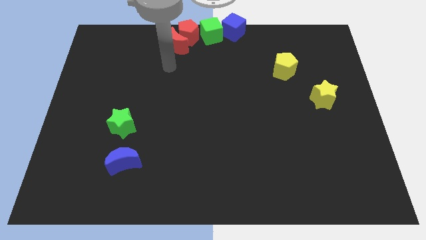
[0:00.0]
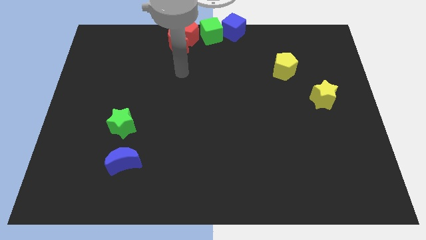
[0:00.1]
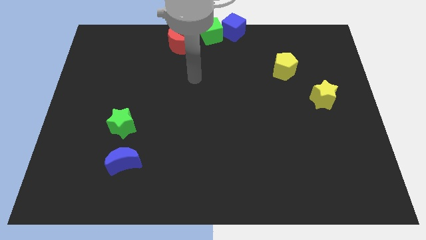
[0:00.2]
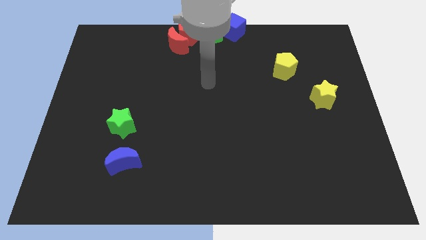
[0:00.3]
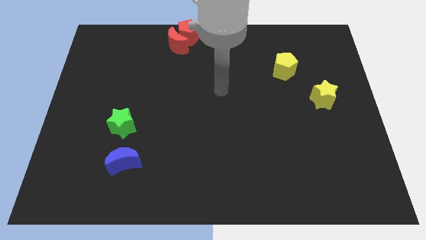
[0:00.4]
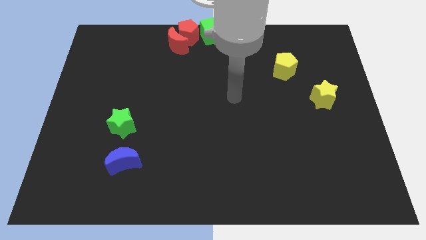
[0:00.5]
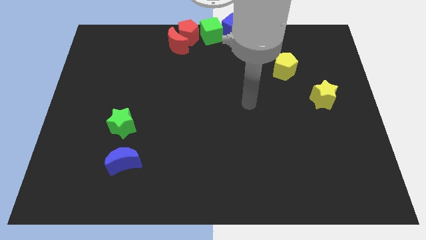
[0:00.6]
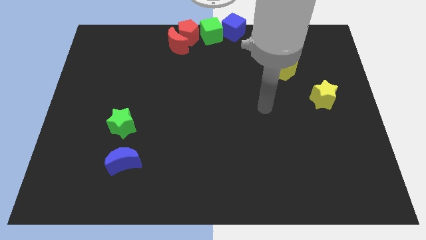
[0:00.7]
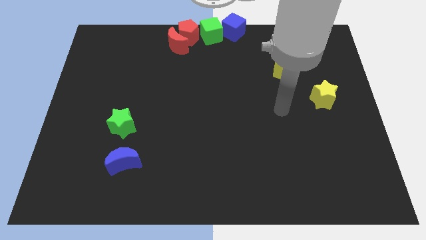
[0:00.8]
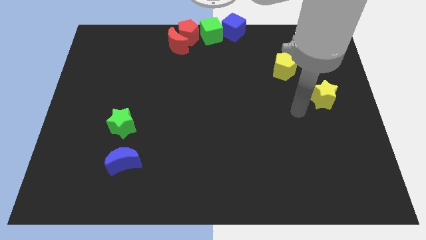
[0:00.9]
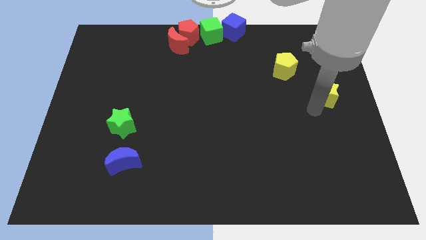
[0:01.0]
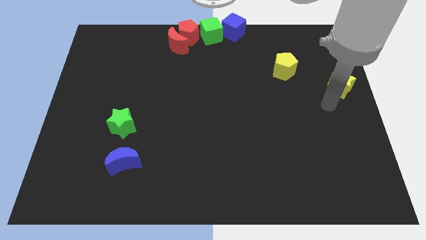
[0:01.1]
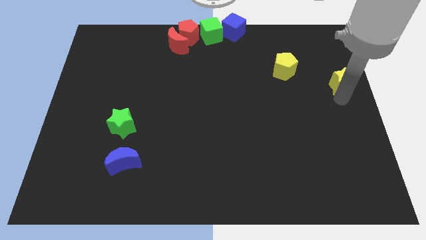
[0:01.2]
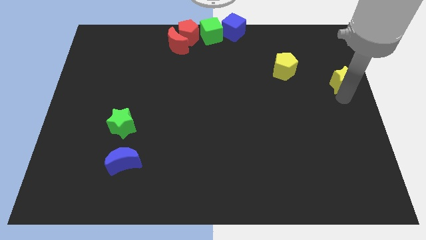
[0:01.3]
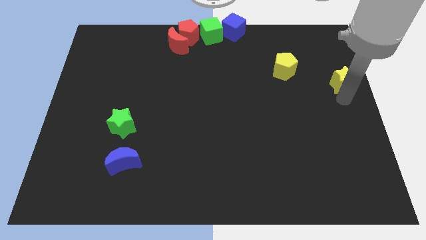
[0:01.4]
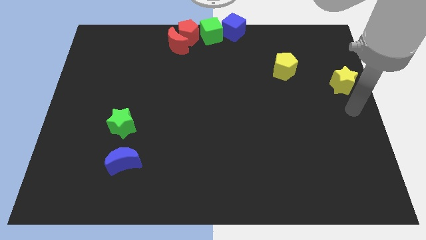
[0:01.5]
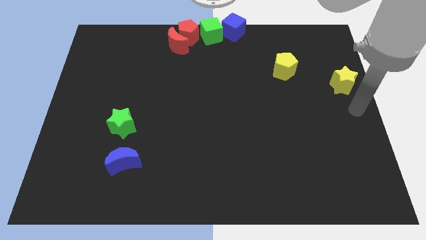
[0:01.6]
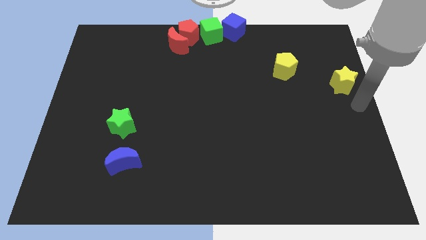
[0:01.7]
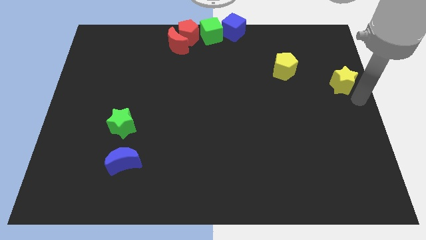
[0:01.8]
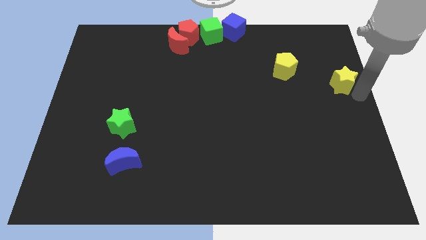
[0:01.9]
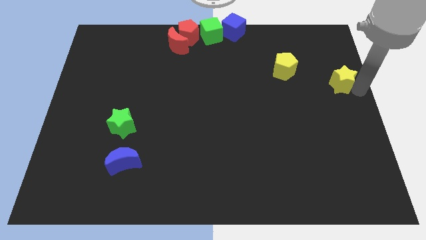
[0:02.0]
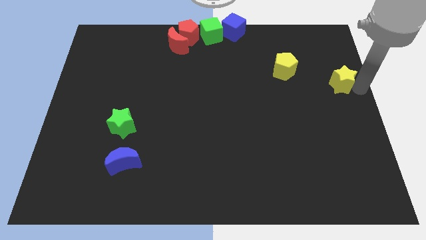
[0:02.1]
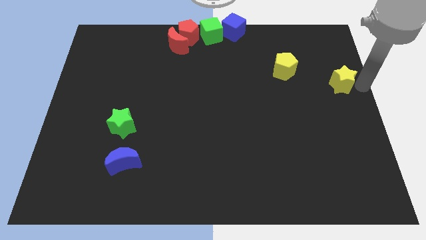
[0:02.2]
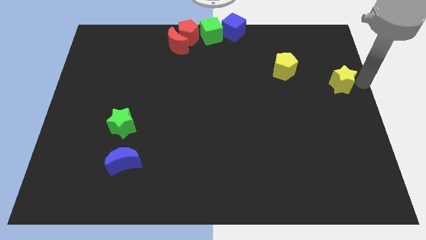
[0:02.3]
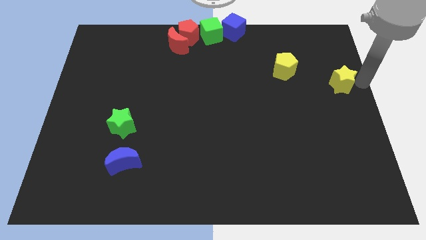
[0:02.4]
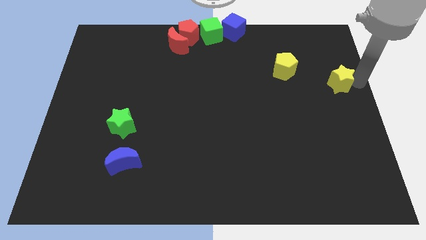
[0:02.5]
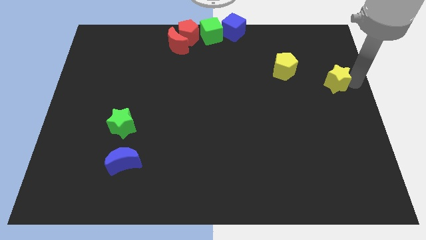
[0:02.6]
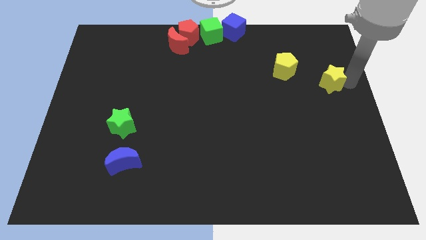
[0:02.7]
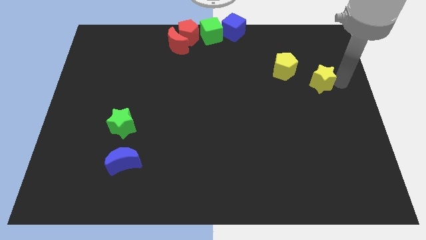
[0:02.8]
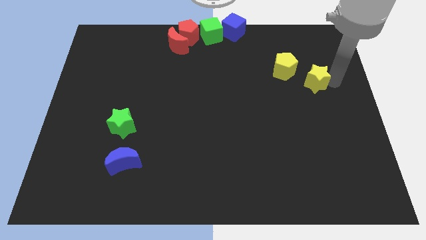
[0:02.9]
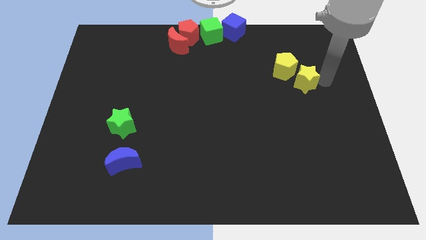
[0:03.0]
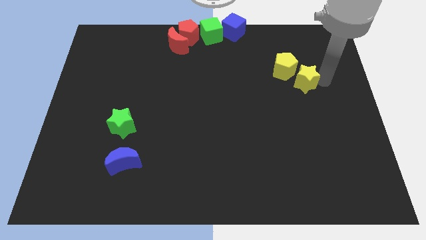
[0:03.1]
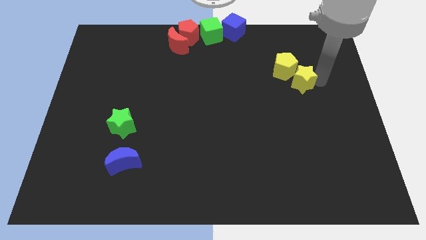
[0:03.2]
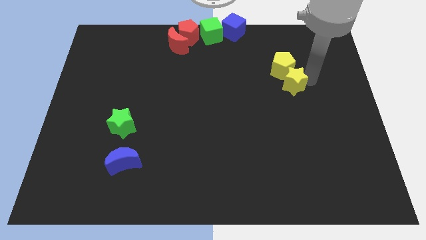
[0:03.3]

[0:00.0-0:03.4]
drag the yellow star to the yellow pentagon

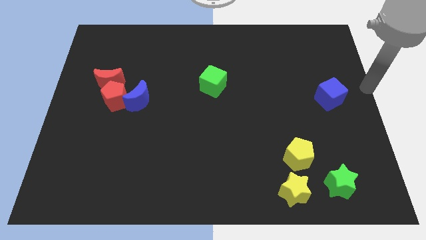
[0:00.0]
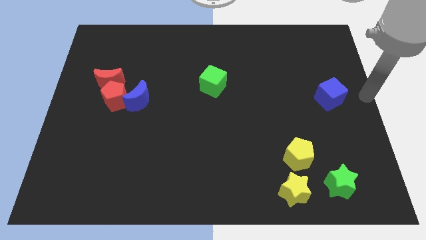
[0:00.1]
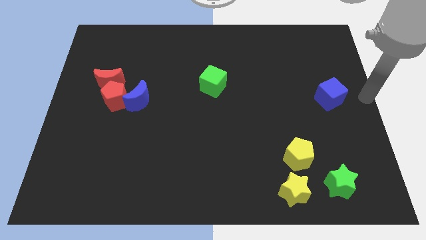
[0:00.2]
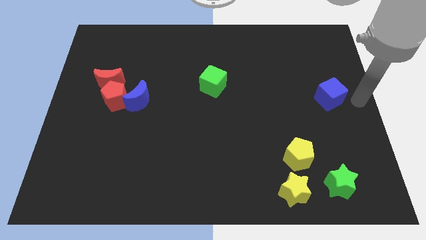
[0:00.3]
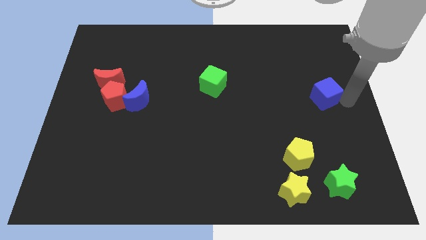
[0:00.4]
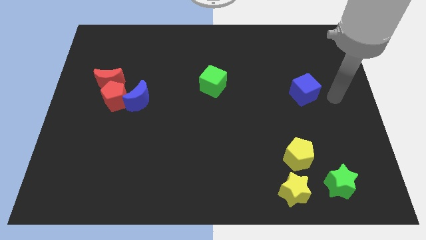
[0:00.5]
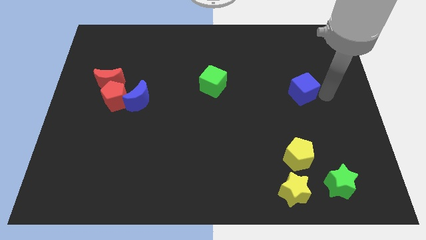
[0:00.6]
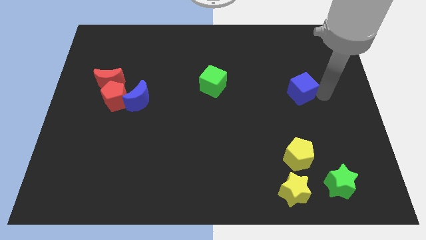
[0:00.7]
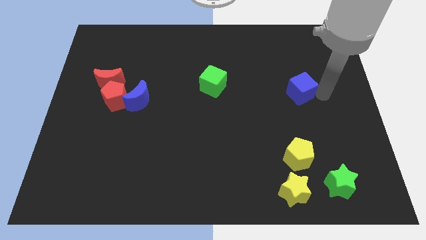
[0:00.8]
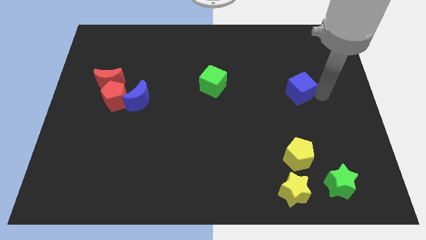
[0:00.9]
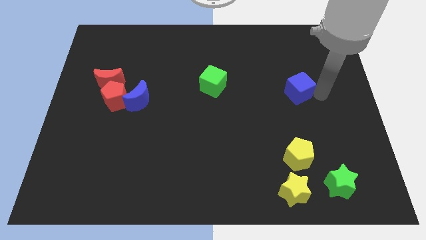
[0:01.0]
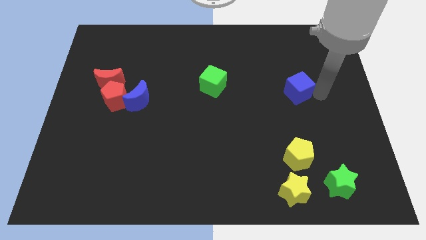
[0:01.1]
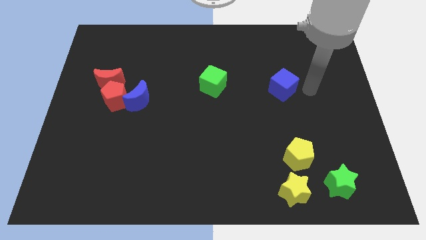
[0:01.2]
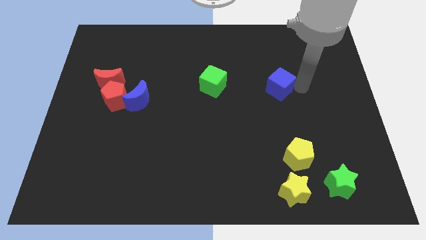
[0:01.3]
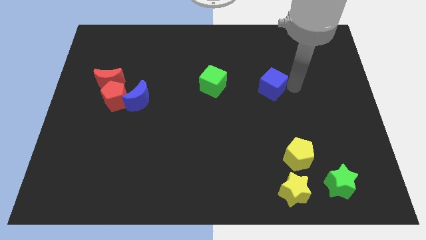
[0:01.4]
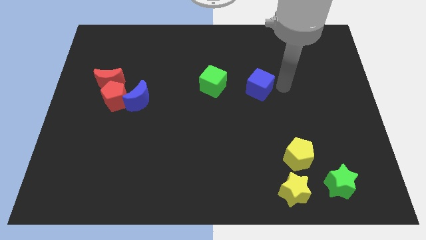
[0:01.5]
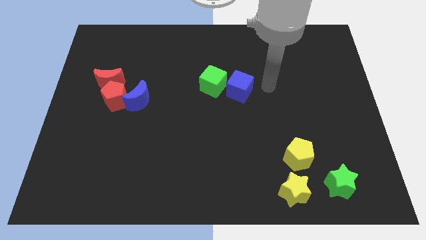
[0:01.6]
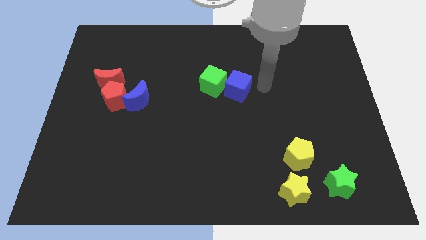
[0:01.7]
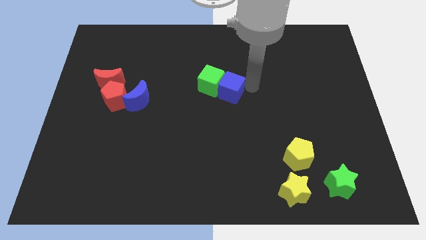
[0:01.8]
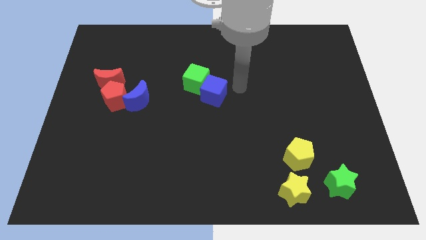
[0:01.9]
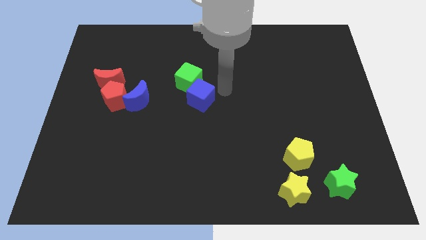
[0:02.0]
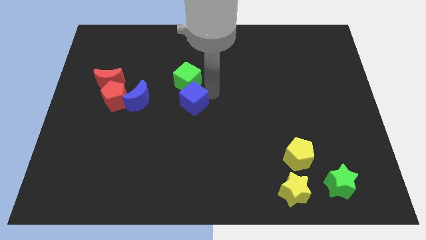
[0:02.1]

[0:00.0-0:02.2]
push the blue cube into green cube

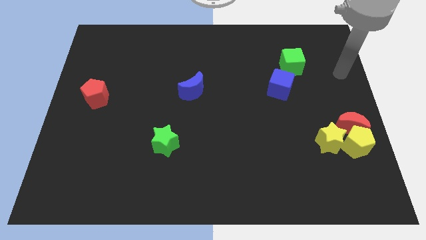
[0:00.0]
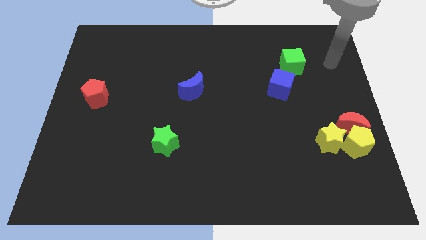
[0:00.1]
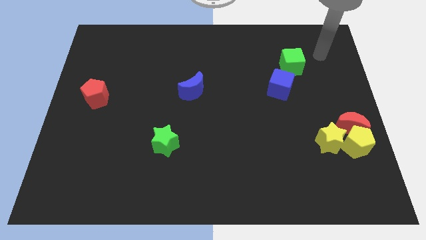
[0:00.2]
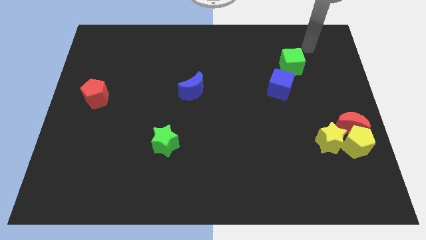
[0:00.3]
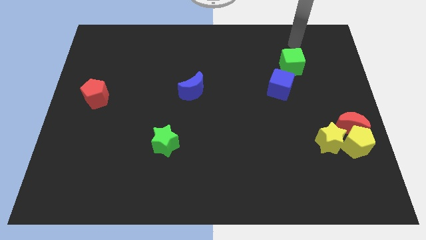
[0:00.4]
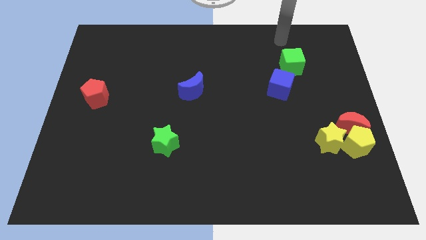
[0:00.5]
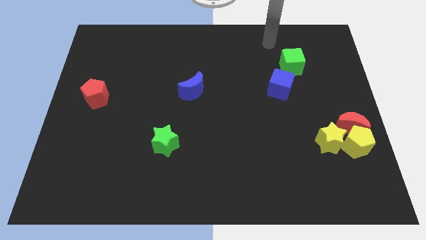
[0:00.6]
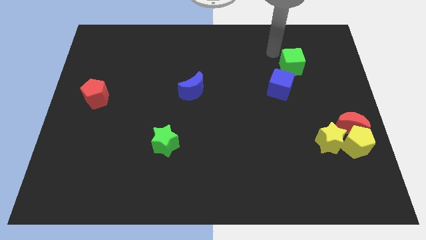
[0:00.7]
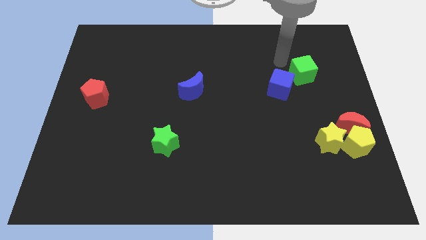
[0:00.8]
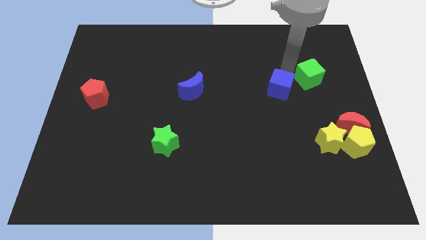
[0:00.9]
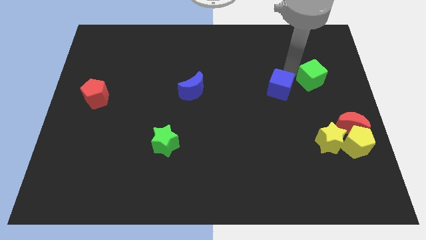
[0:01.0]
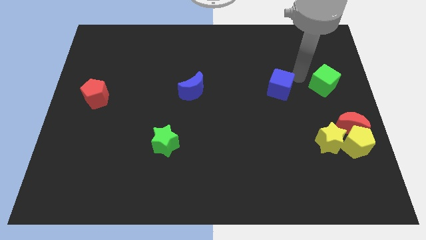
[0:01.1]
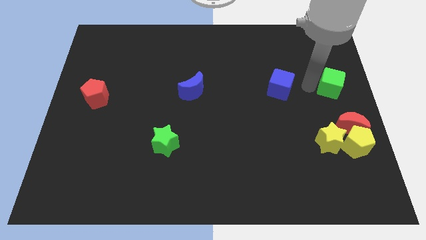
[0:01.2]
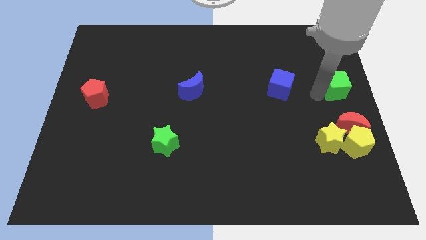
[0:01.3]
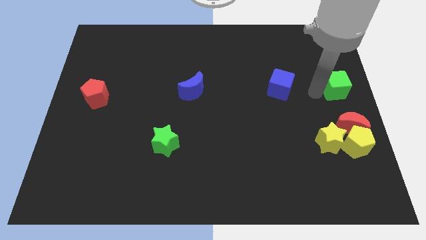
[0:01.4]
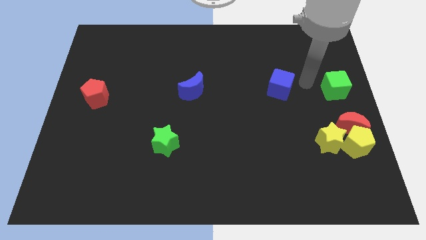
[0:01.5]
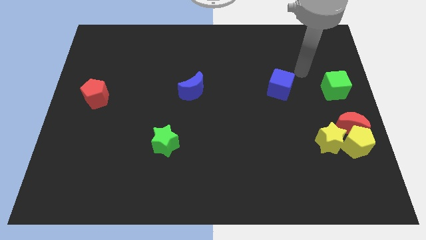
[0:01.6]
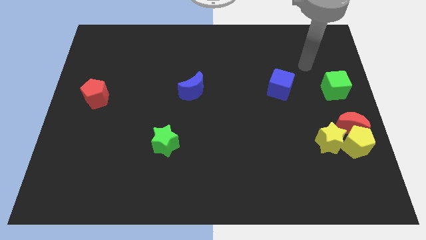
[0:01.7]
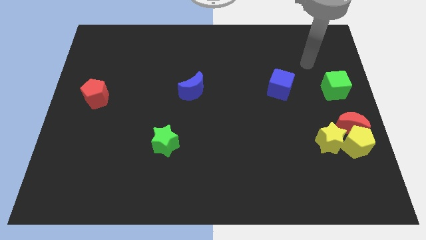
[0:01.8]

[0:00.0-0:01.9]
place the green cube parallel to blue cube

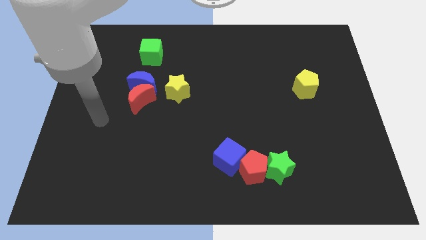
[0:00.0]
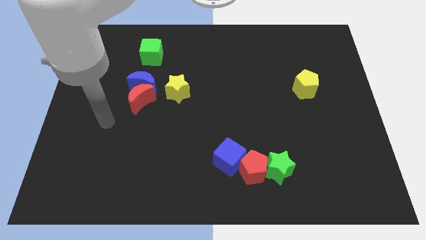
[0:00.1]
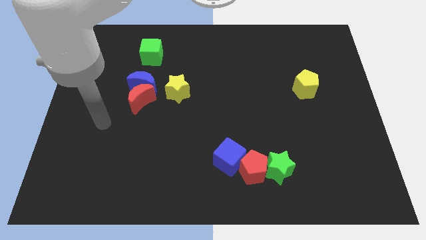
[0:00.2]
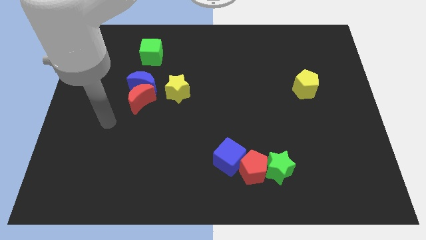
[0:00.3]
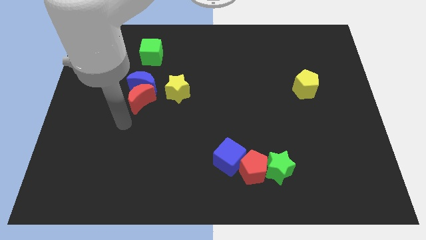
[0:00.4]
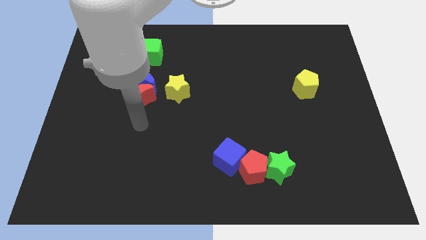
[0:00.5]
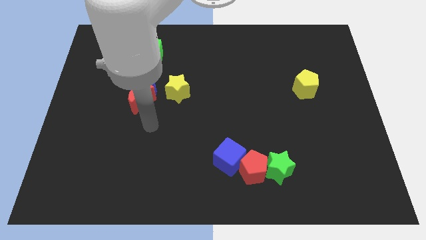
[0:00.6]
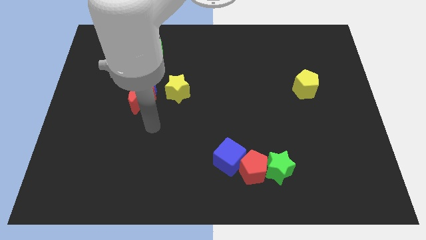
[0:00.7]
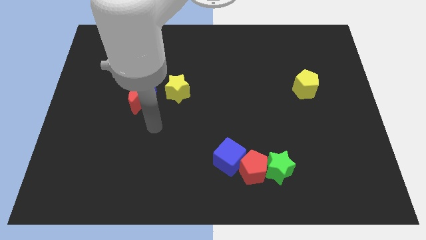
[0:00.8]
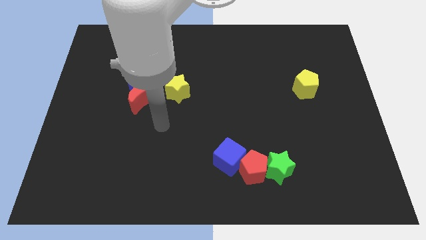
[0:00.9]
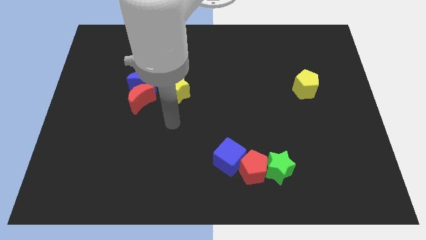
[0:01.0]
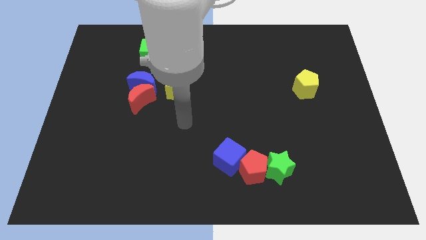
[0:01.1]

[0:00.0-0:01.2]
move your arm below the yellow star

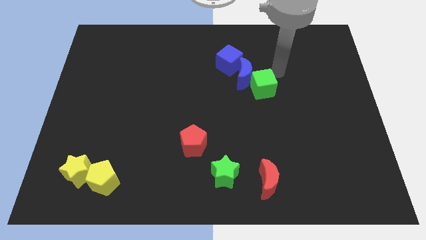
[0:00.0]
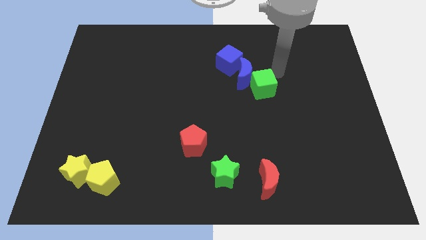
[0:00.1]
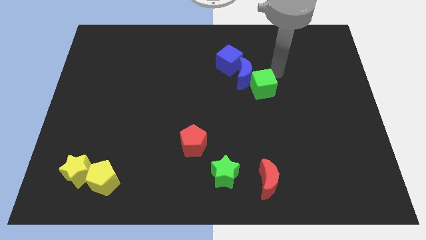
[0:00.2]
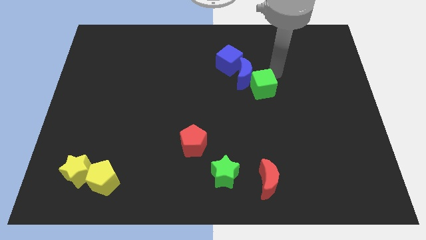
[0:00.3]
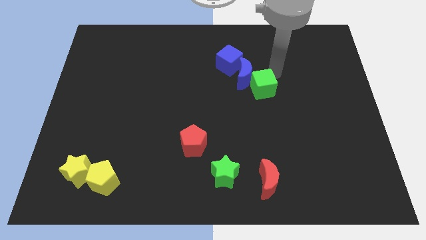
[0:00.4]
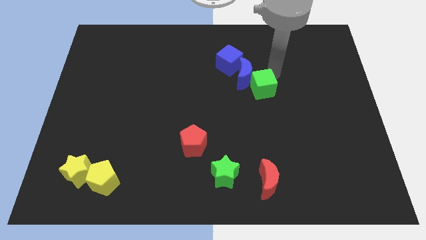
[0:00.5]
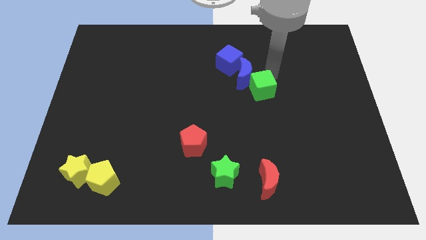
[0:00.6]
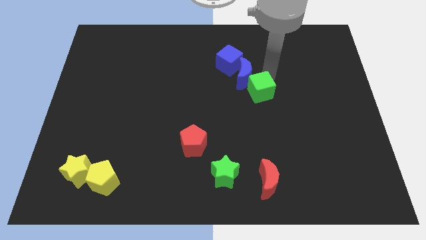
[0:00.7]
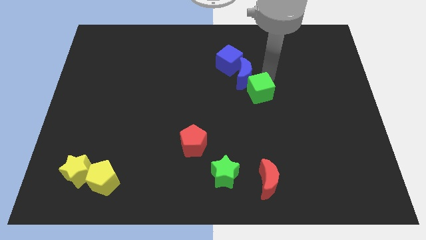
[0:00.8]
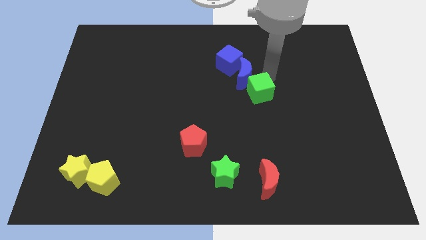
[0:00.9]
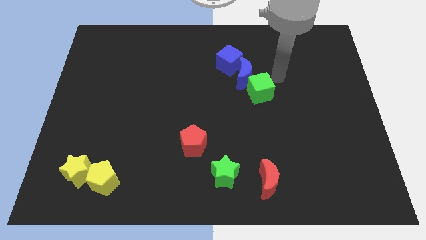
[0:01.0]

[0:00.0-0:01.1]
move the green cube slightly
